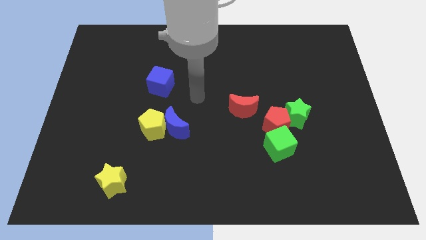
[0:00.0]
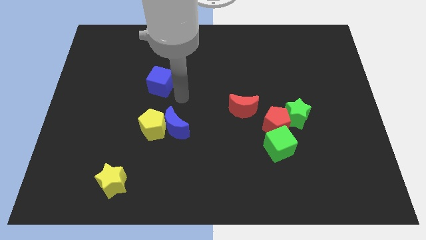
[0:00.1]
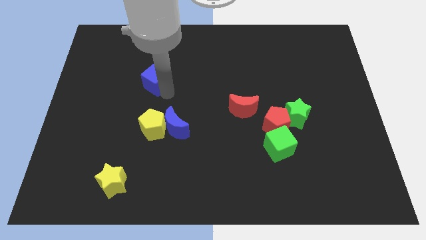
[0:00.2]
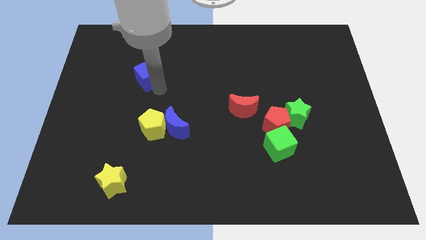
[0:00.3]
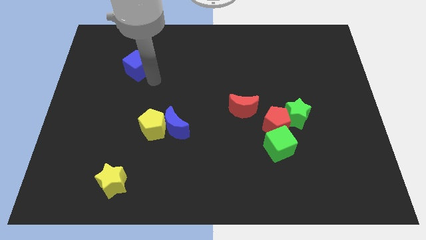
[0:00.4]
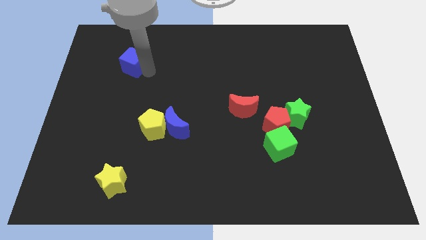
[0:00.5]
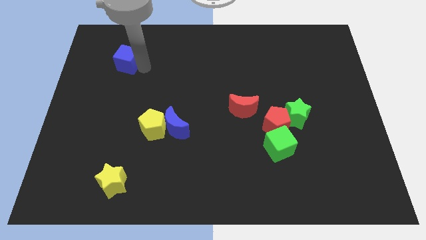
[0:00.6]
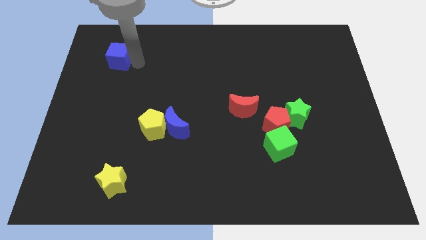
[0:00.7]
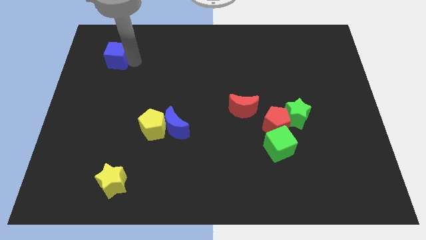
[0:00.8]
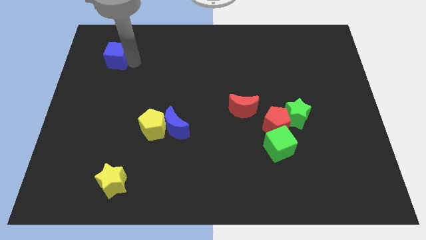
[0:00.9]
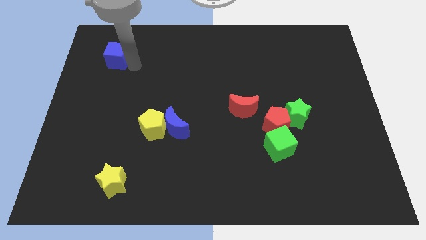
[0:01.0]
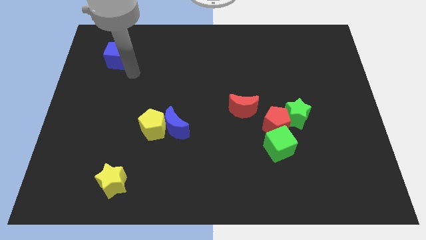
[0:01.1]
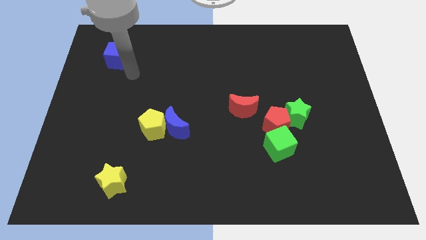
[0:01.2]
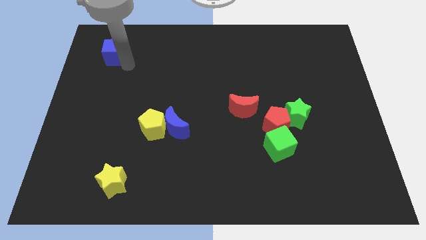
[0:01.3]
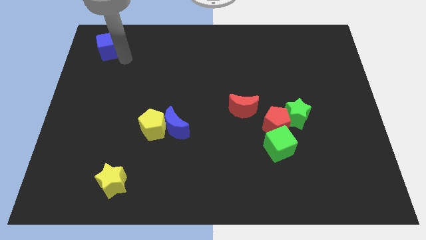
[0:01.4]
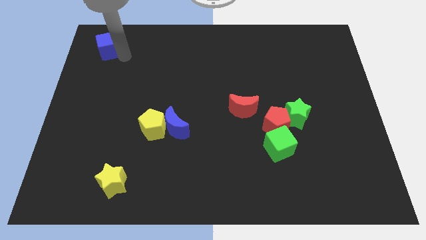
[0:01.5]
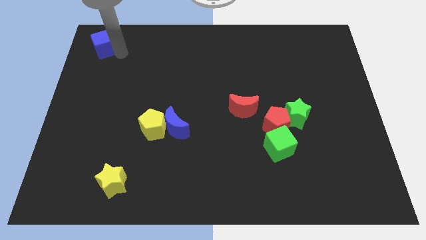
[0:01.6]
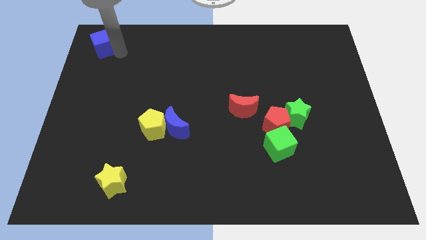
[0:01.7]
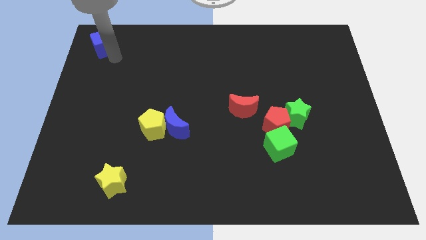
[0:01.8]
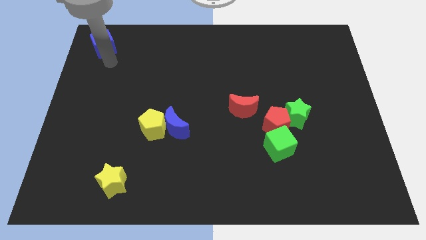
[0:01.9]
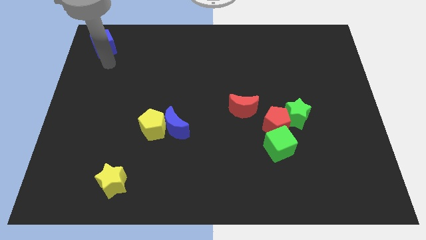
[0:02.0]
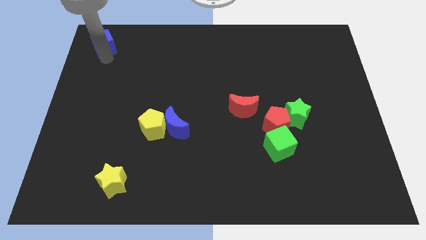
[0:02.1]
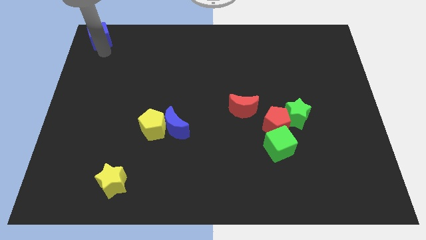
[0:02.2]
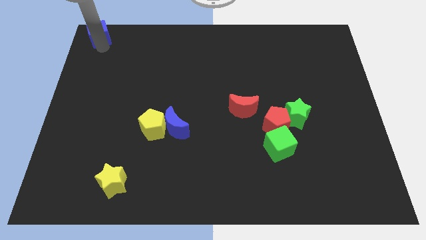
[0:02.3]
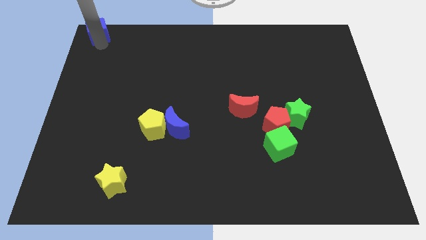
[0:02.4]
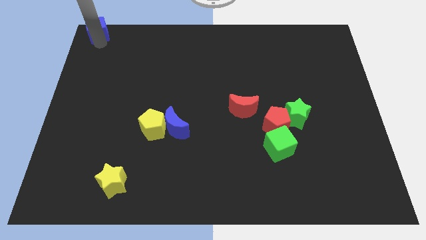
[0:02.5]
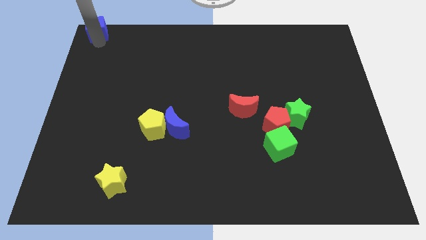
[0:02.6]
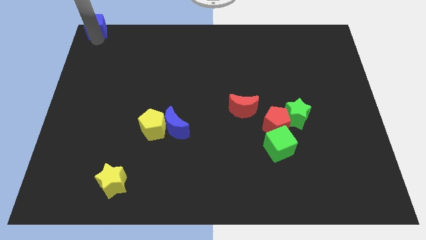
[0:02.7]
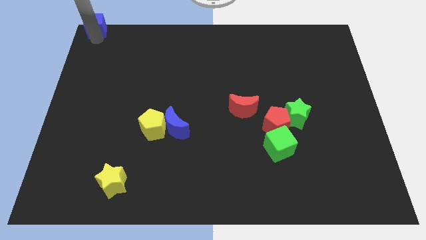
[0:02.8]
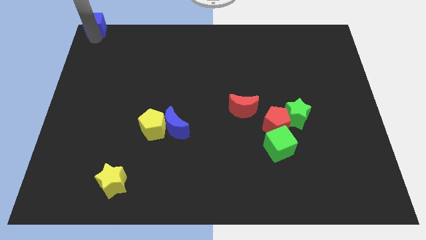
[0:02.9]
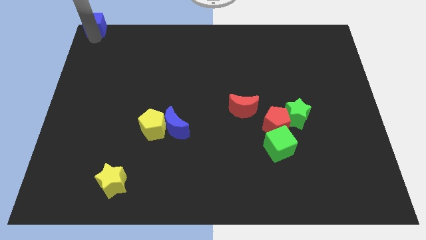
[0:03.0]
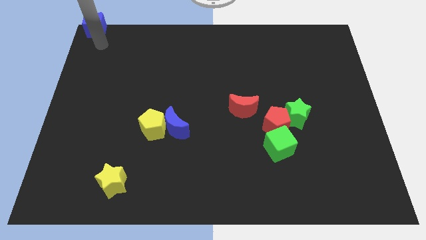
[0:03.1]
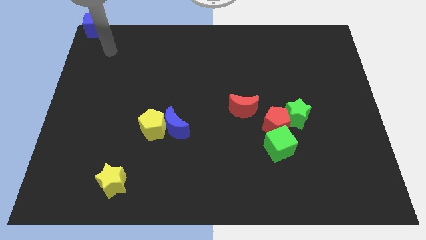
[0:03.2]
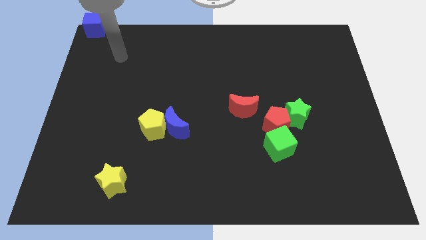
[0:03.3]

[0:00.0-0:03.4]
push the blue cube to the top left corner

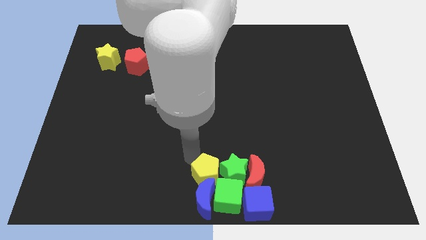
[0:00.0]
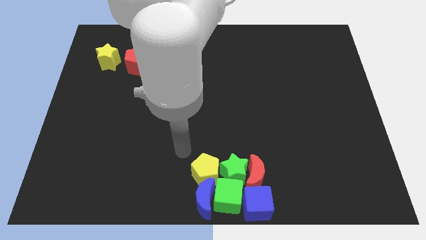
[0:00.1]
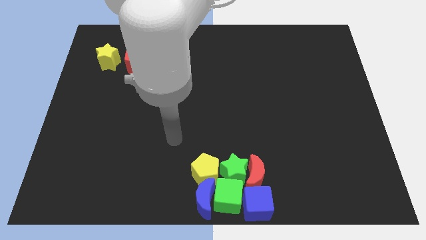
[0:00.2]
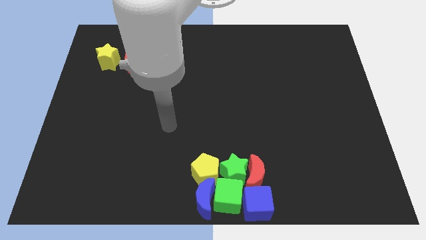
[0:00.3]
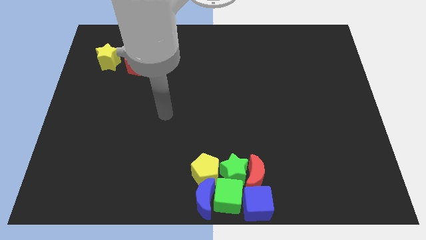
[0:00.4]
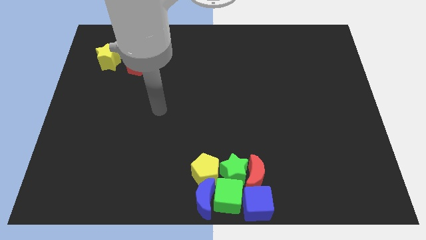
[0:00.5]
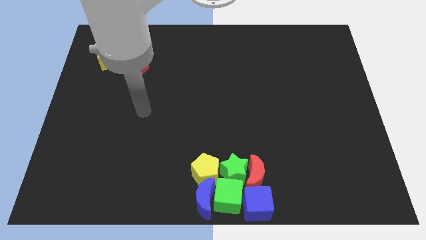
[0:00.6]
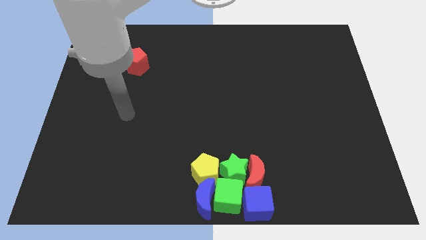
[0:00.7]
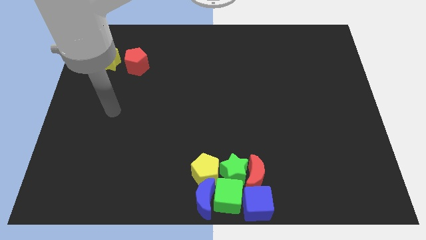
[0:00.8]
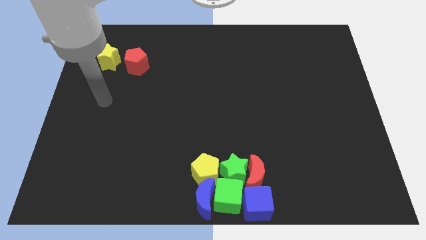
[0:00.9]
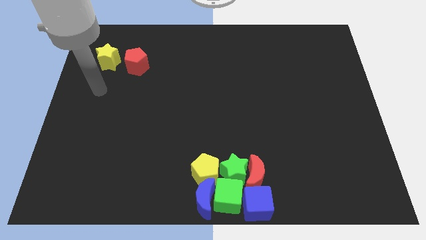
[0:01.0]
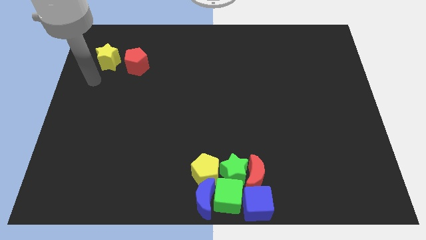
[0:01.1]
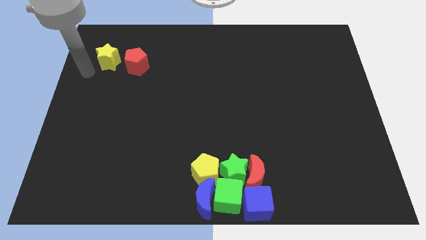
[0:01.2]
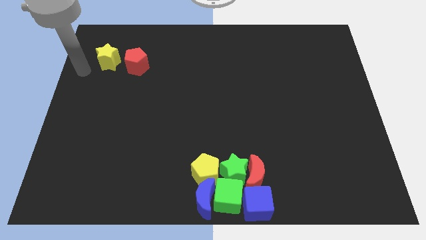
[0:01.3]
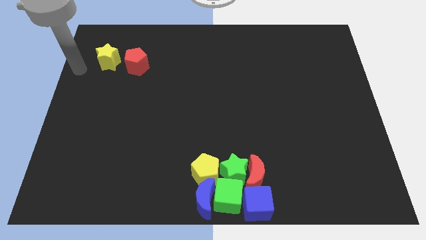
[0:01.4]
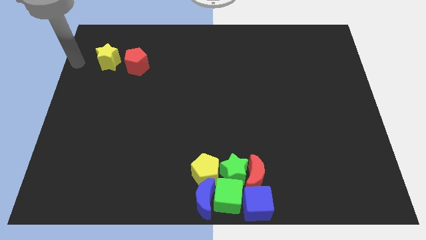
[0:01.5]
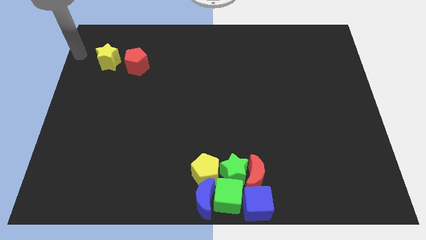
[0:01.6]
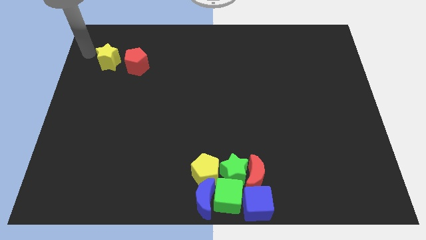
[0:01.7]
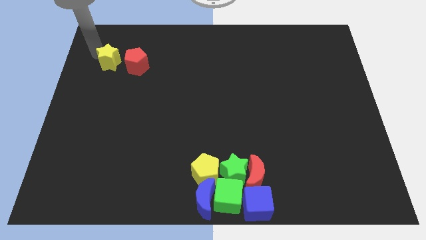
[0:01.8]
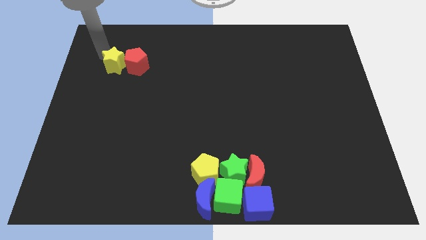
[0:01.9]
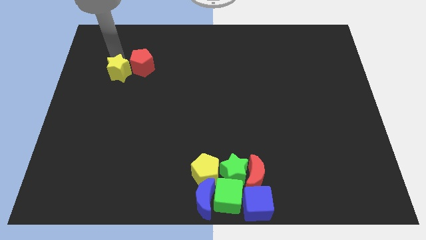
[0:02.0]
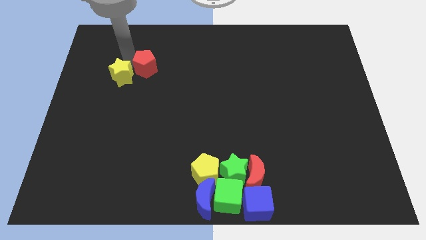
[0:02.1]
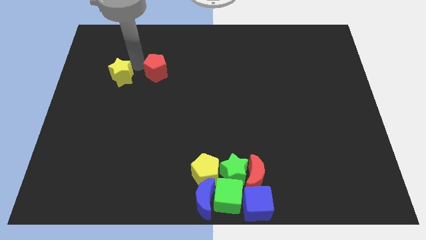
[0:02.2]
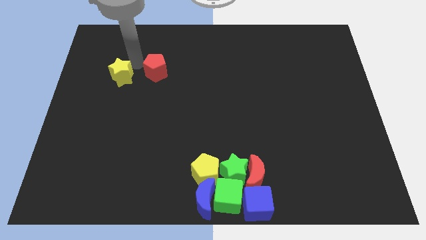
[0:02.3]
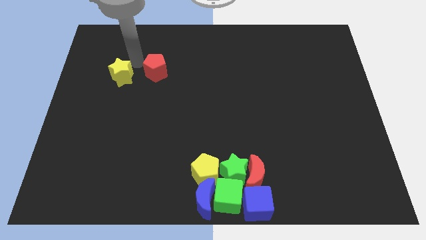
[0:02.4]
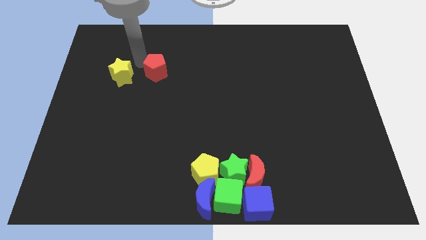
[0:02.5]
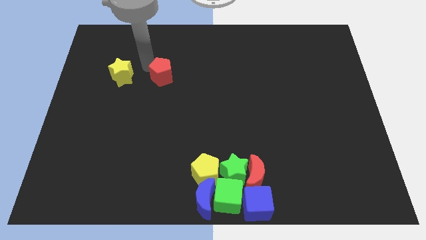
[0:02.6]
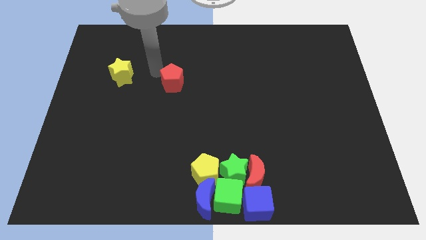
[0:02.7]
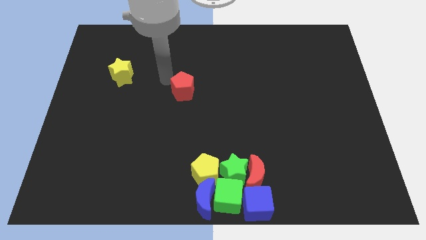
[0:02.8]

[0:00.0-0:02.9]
go and push the red pentagon towards the group of blocks

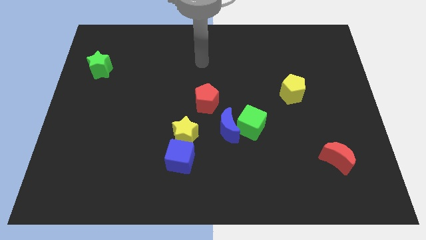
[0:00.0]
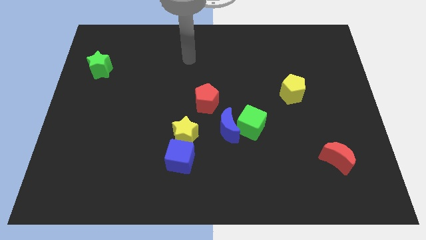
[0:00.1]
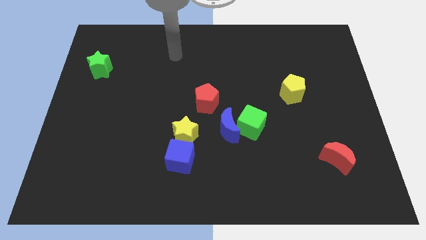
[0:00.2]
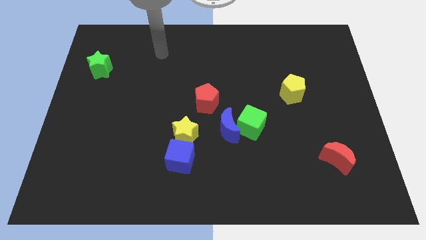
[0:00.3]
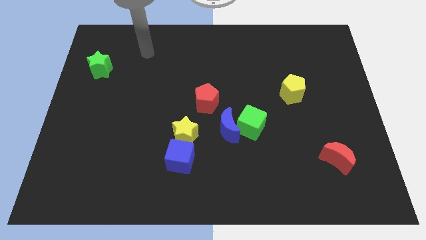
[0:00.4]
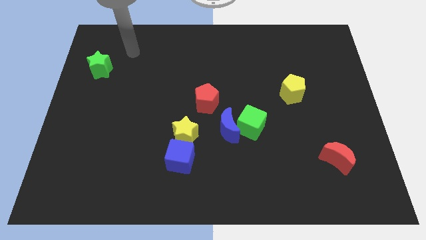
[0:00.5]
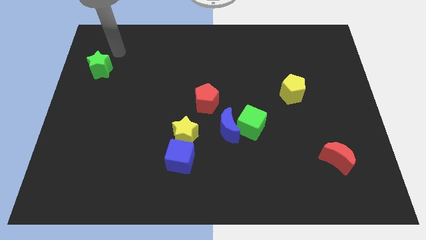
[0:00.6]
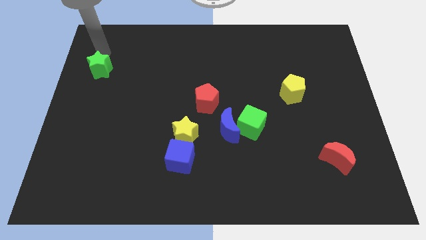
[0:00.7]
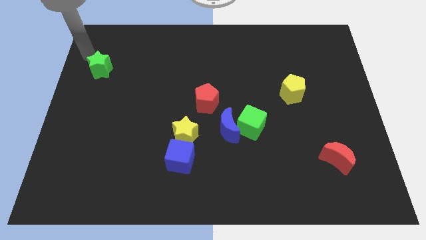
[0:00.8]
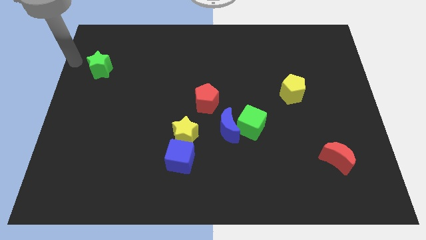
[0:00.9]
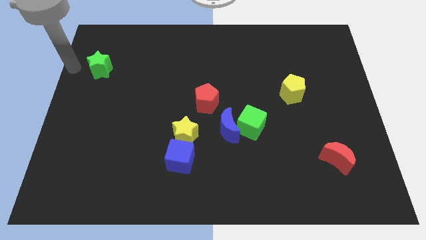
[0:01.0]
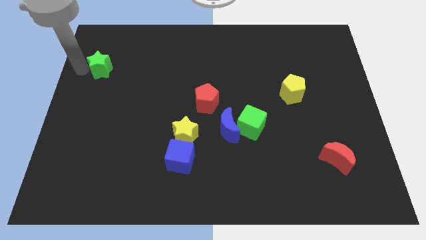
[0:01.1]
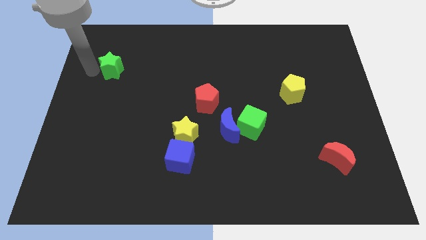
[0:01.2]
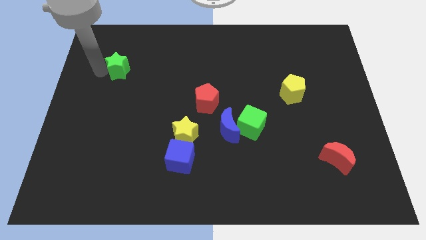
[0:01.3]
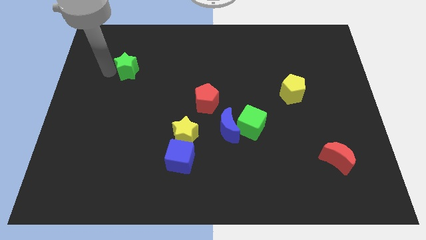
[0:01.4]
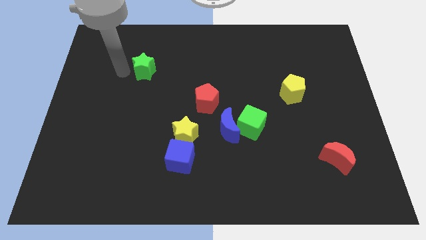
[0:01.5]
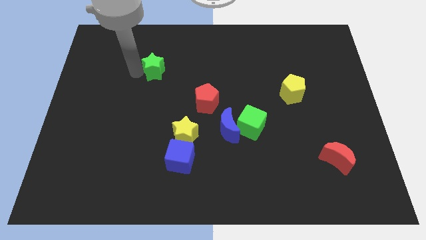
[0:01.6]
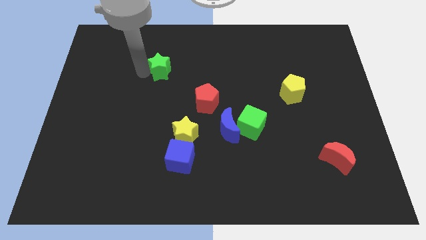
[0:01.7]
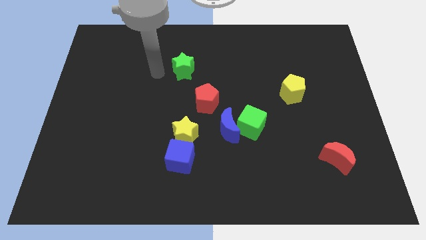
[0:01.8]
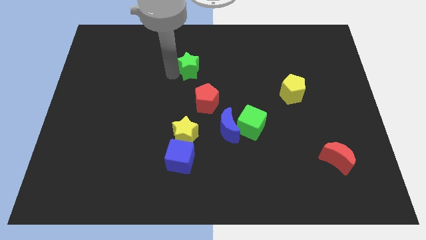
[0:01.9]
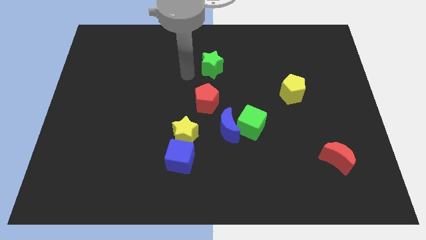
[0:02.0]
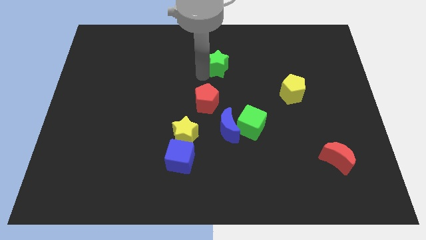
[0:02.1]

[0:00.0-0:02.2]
place the green star vertically above the red pentagon

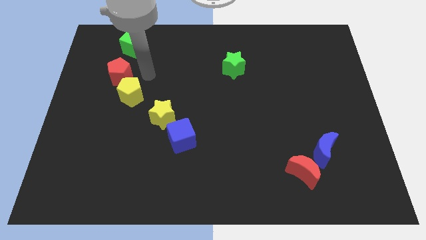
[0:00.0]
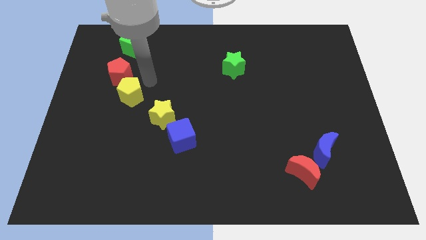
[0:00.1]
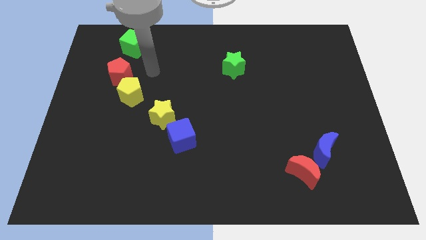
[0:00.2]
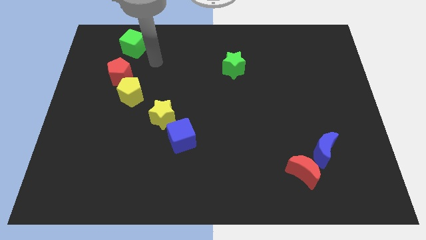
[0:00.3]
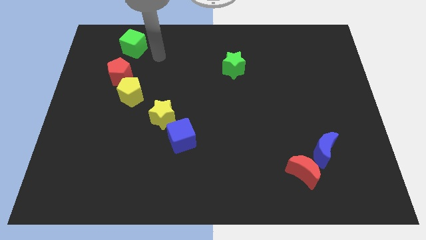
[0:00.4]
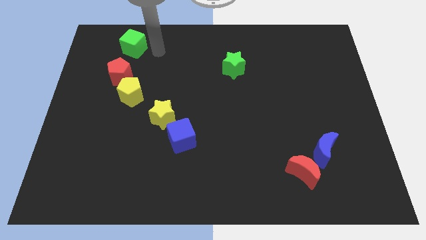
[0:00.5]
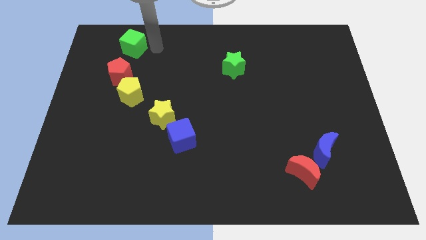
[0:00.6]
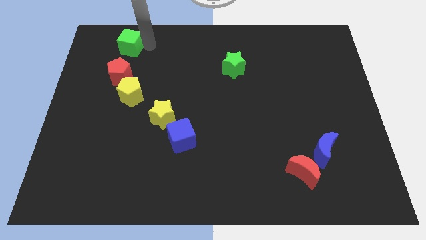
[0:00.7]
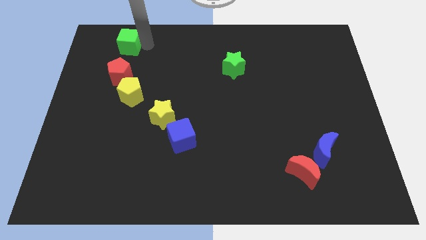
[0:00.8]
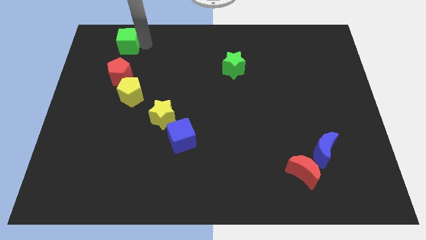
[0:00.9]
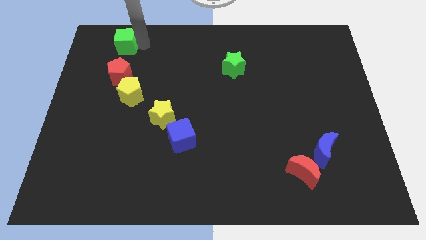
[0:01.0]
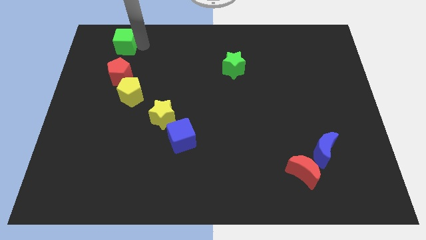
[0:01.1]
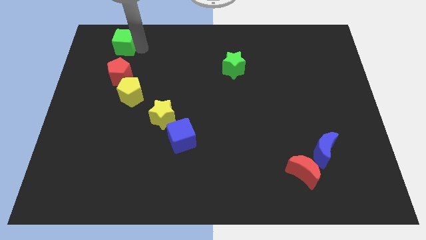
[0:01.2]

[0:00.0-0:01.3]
place the green cube diagonally left to the green star
